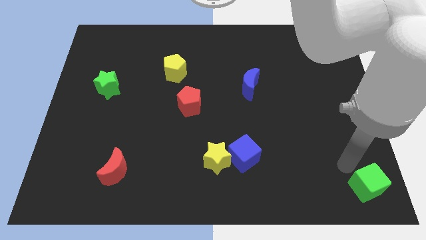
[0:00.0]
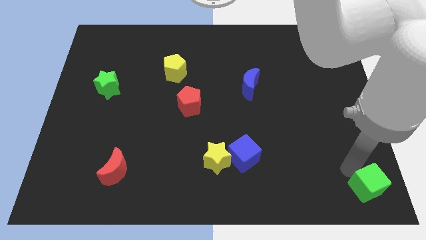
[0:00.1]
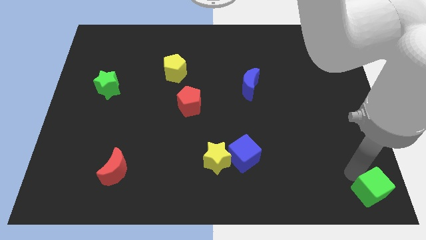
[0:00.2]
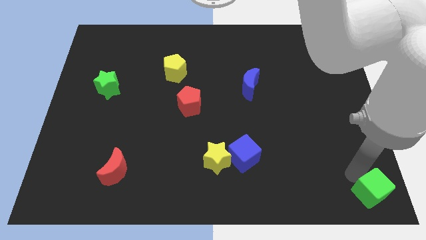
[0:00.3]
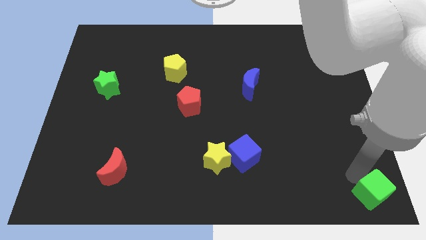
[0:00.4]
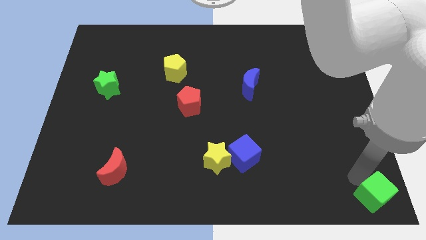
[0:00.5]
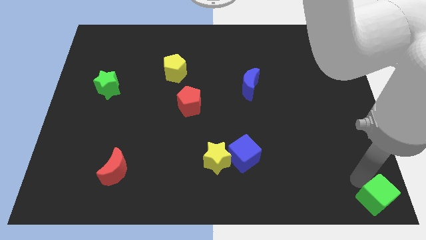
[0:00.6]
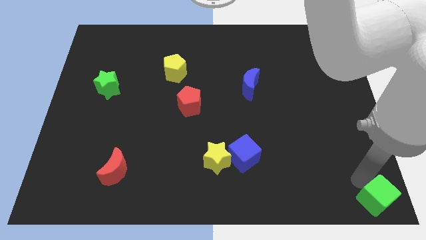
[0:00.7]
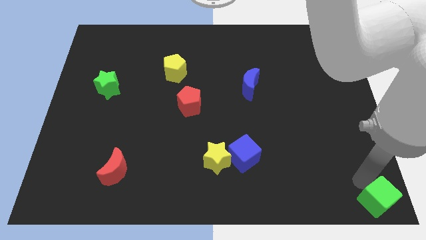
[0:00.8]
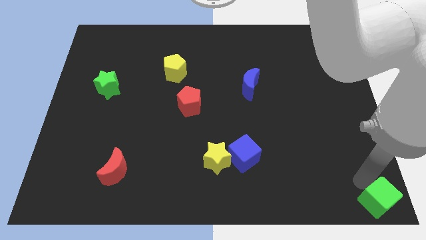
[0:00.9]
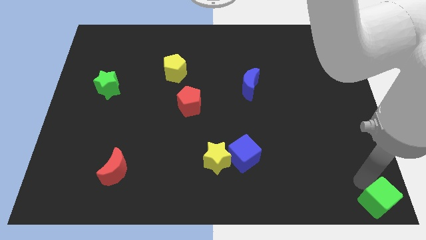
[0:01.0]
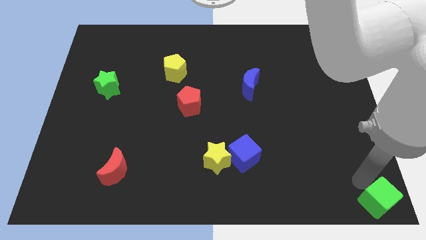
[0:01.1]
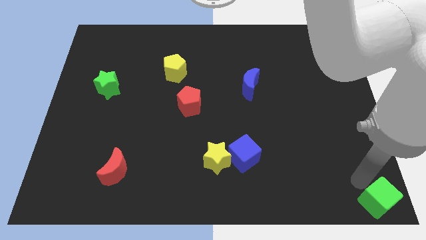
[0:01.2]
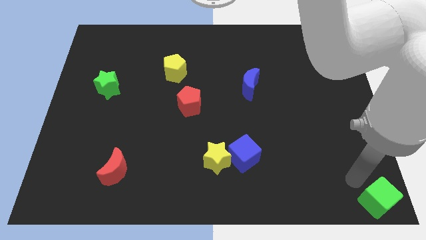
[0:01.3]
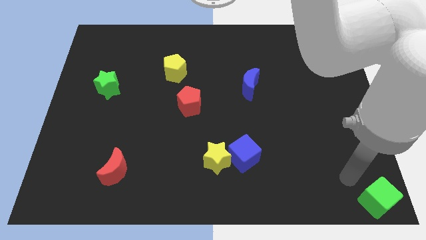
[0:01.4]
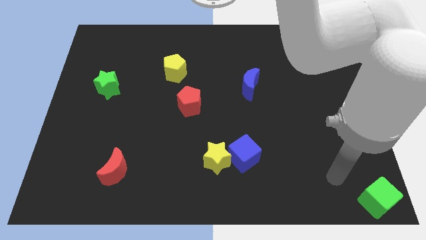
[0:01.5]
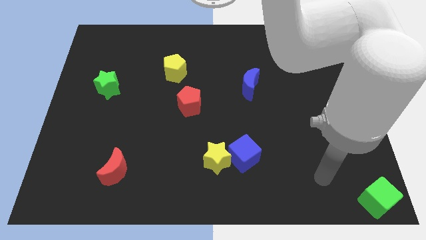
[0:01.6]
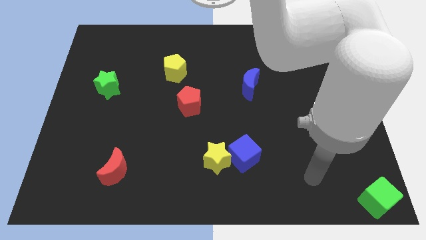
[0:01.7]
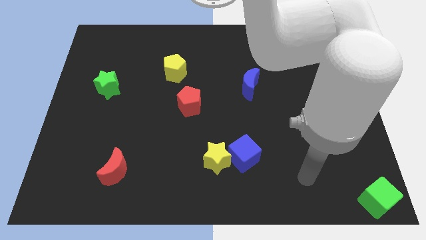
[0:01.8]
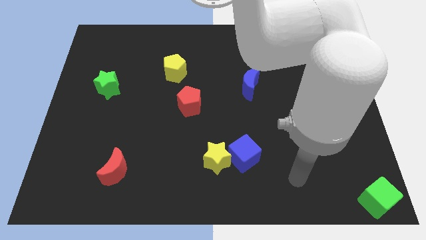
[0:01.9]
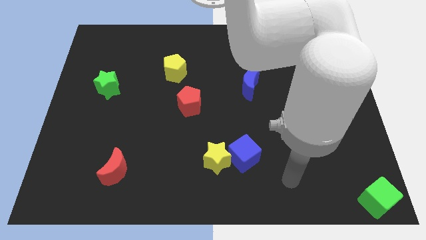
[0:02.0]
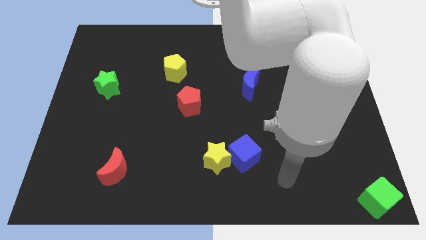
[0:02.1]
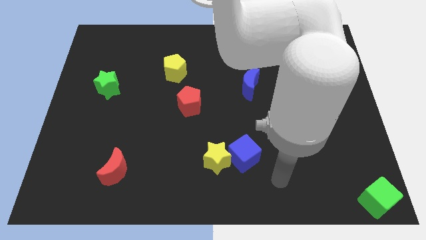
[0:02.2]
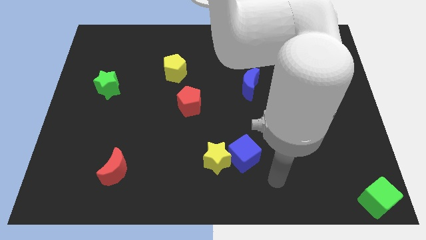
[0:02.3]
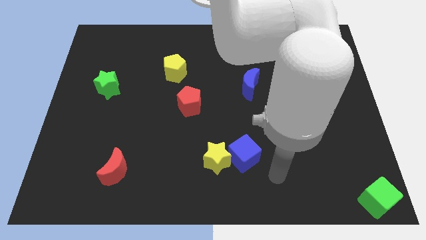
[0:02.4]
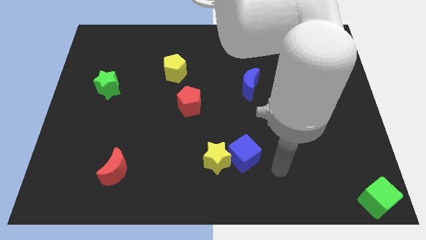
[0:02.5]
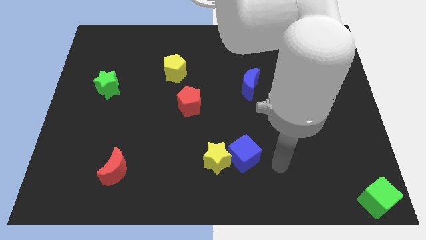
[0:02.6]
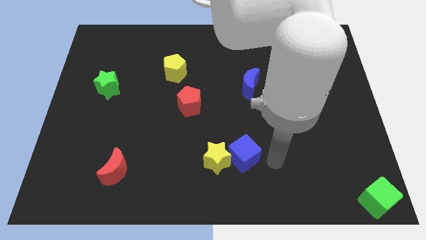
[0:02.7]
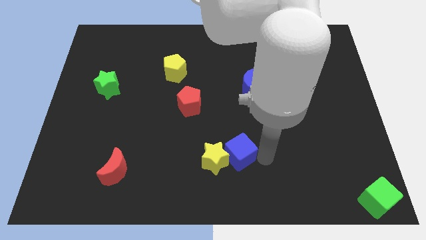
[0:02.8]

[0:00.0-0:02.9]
place the arm right to the blue cube

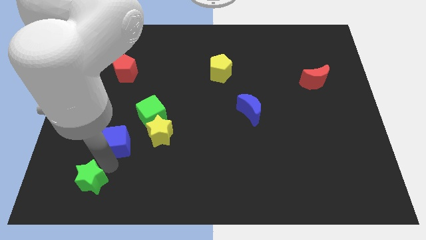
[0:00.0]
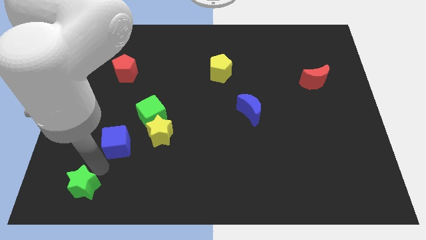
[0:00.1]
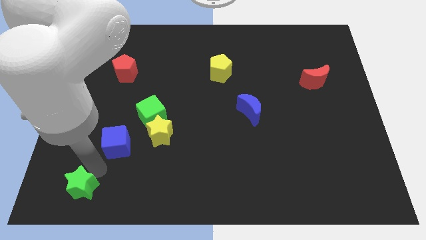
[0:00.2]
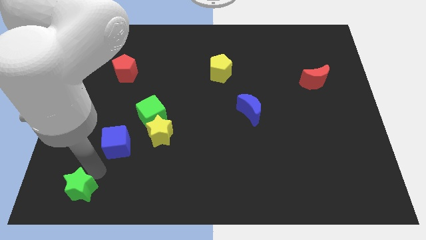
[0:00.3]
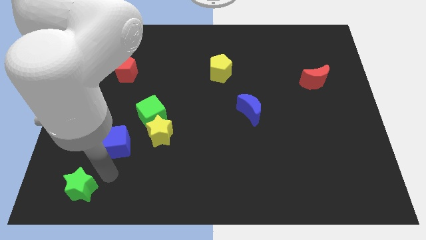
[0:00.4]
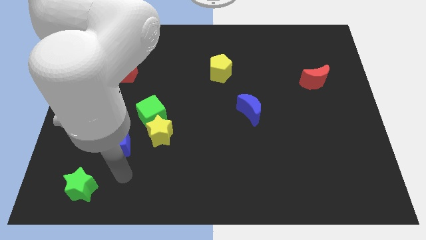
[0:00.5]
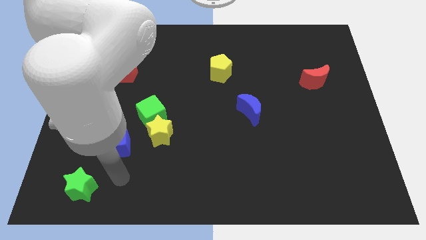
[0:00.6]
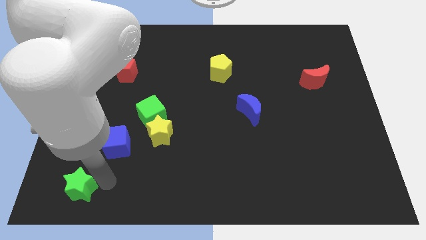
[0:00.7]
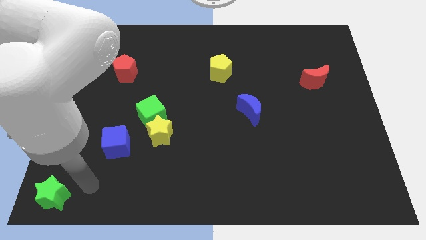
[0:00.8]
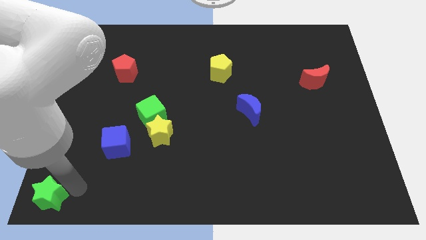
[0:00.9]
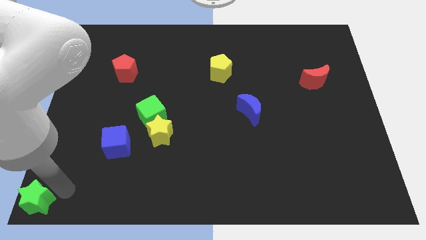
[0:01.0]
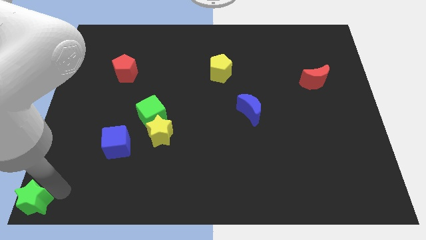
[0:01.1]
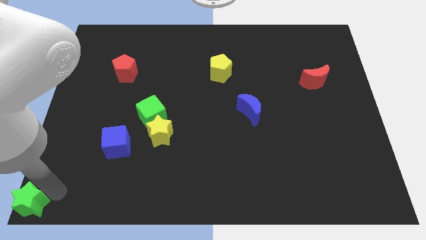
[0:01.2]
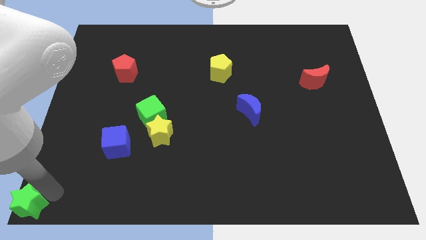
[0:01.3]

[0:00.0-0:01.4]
push green star to the bottom left corner of the board

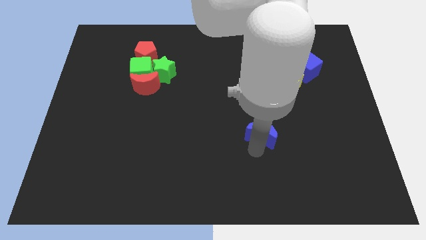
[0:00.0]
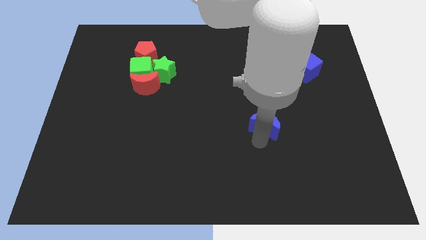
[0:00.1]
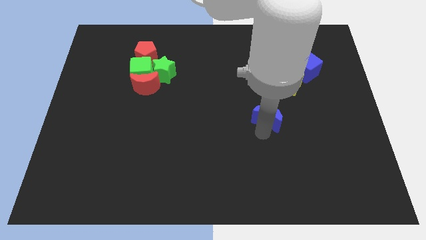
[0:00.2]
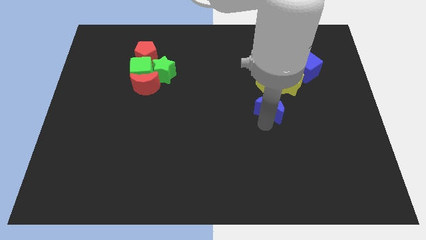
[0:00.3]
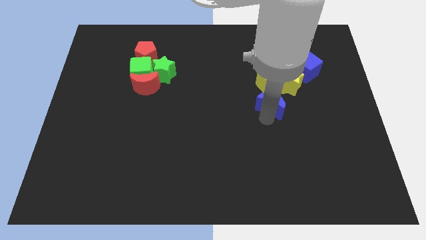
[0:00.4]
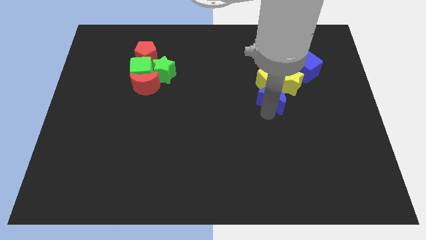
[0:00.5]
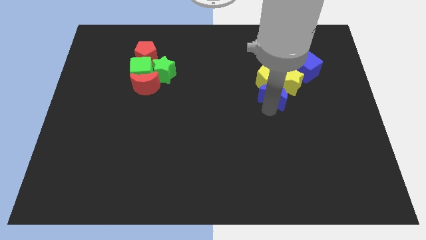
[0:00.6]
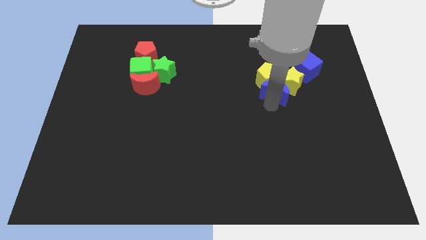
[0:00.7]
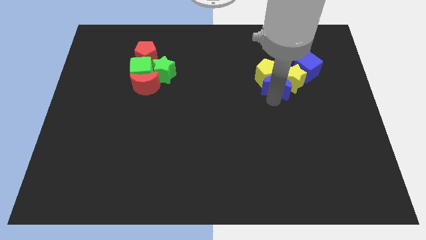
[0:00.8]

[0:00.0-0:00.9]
push the blue moon into the yellow blocks

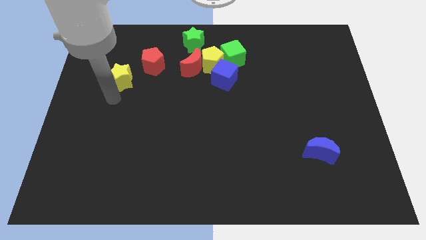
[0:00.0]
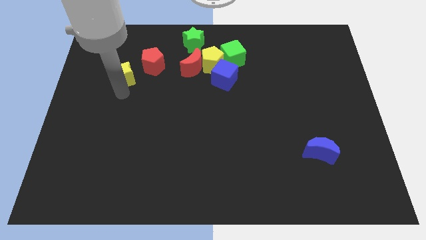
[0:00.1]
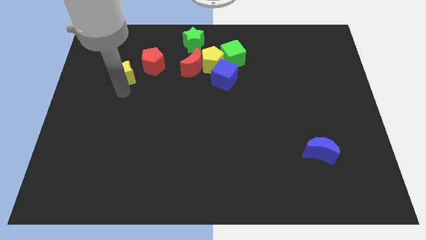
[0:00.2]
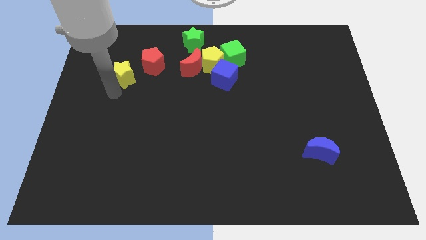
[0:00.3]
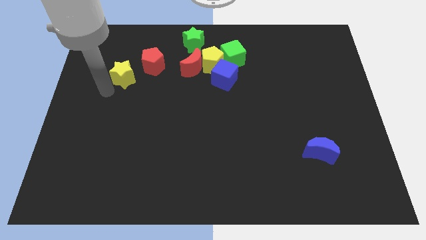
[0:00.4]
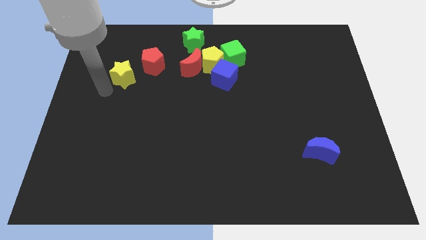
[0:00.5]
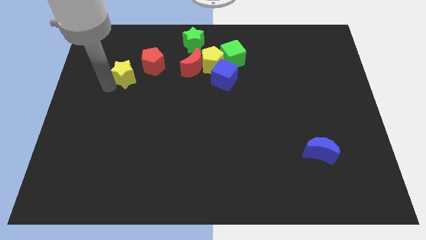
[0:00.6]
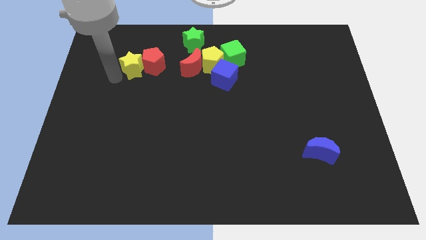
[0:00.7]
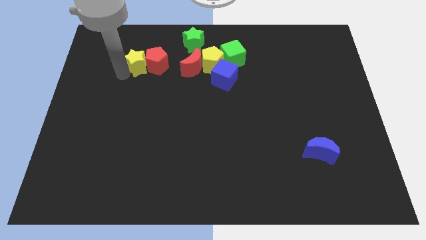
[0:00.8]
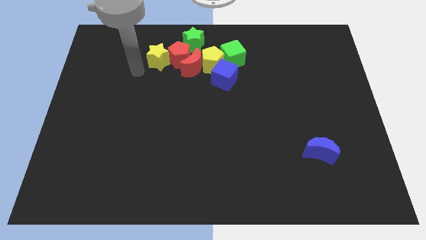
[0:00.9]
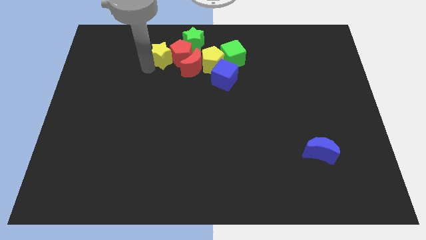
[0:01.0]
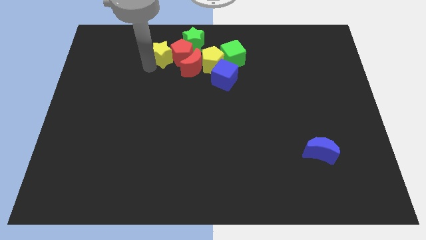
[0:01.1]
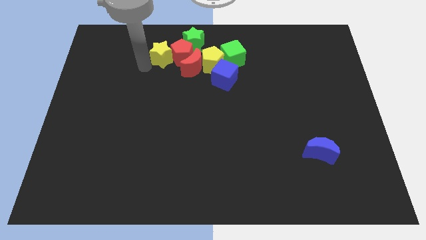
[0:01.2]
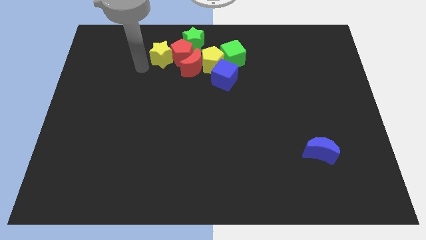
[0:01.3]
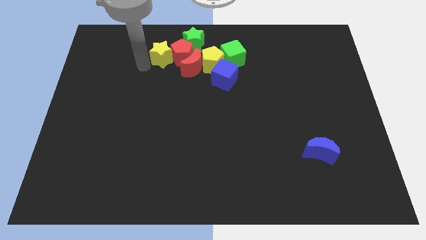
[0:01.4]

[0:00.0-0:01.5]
push the red pentagon into the green star with the yellow star

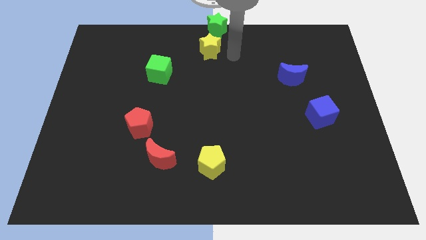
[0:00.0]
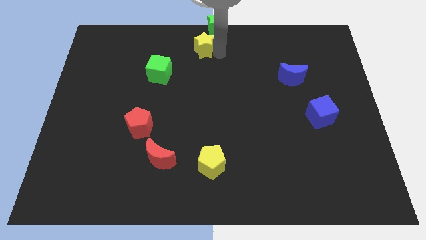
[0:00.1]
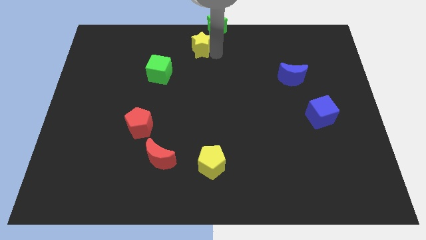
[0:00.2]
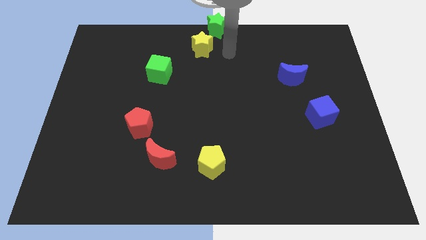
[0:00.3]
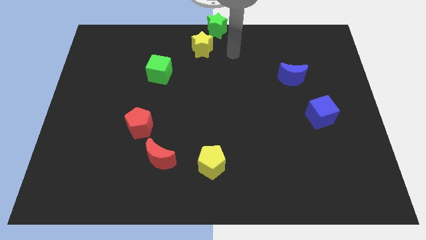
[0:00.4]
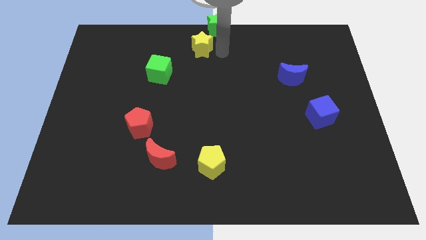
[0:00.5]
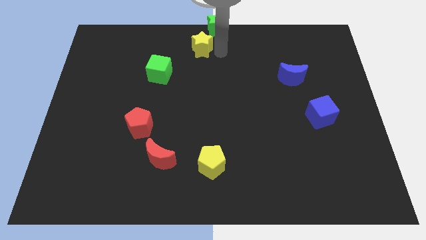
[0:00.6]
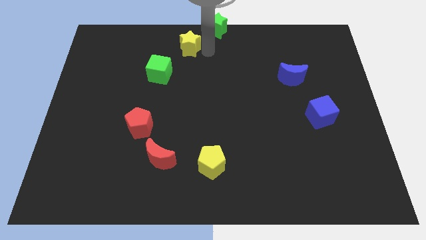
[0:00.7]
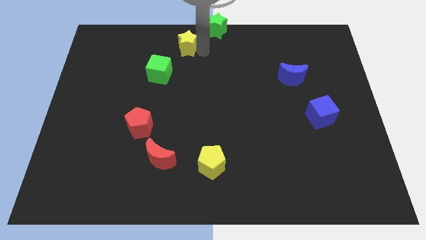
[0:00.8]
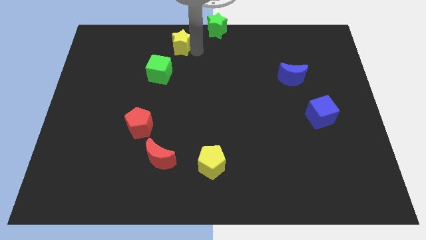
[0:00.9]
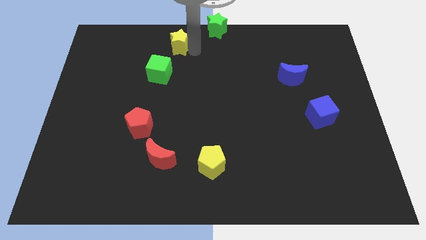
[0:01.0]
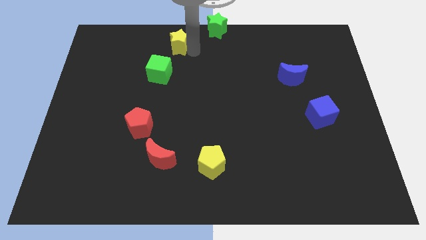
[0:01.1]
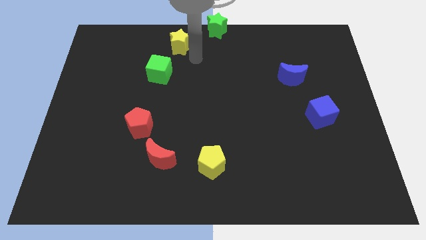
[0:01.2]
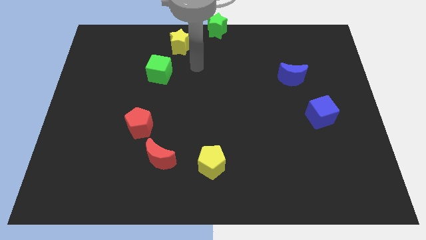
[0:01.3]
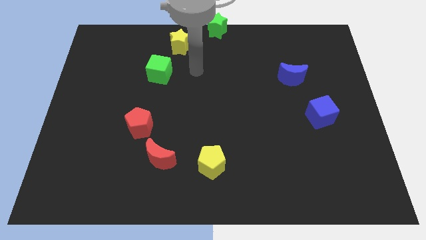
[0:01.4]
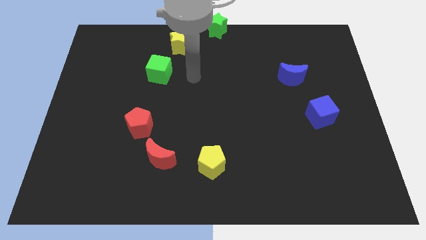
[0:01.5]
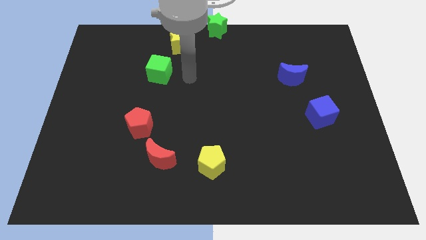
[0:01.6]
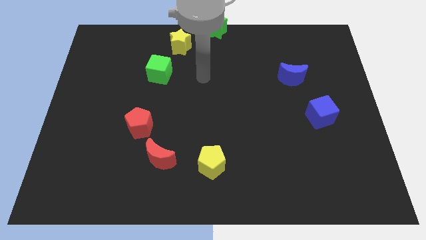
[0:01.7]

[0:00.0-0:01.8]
move yellow star above the green cube

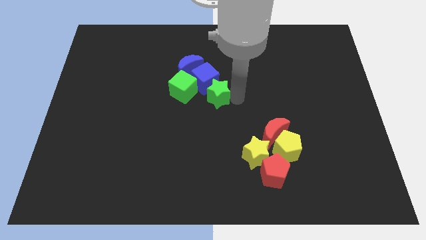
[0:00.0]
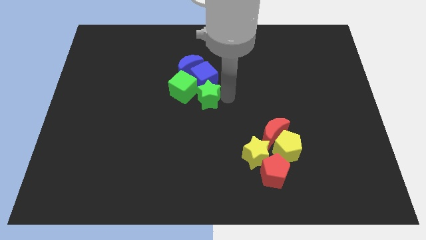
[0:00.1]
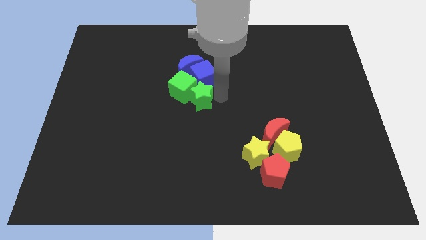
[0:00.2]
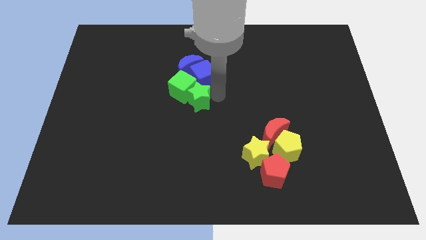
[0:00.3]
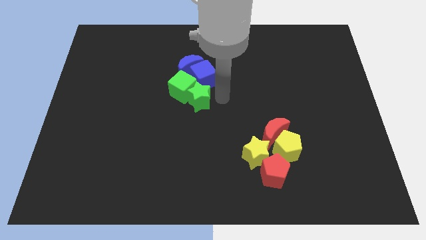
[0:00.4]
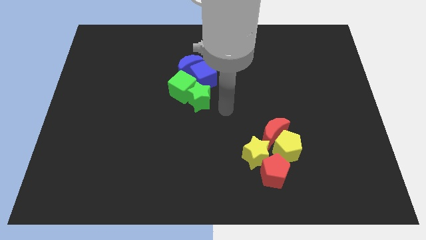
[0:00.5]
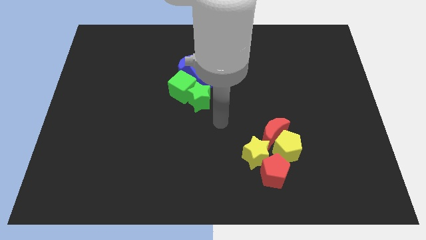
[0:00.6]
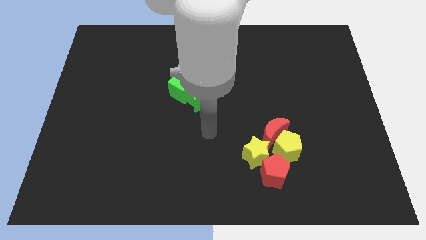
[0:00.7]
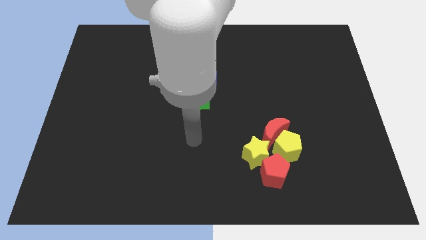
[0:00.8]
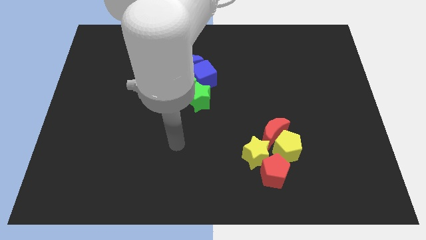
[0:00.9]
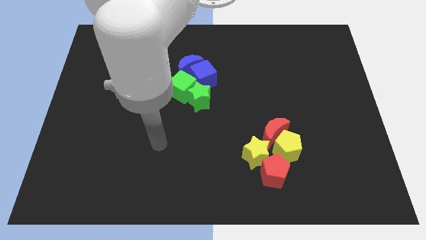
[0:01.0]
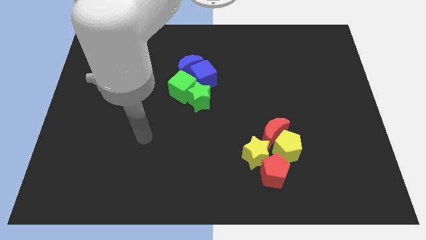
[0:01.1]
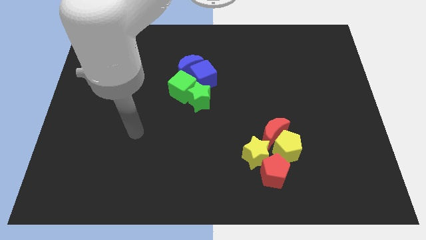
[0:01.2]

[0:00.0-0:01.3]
place green star to the right side of the green cube
